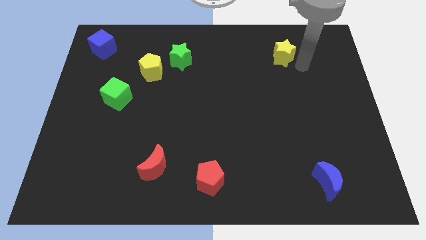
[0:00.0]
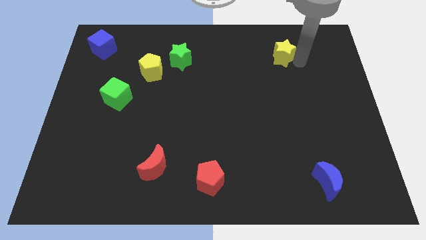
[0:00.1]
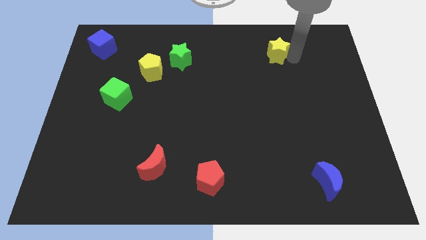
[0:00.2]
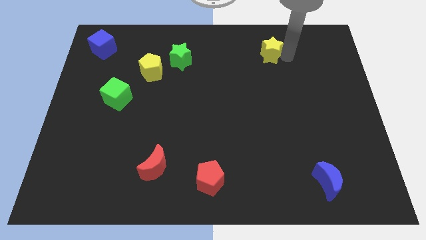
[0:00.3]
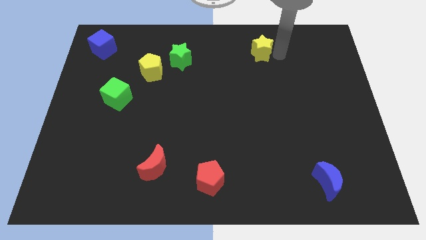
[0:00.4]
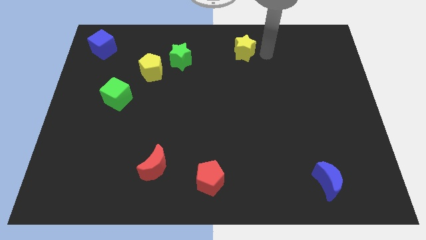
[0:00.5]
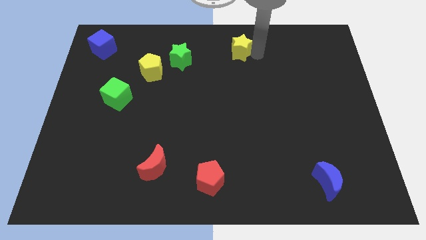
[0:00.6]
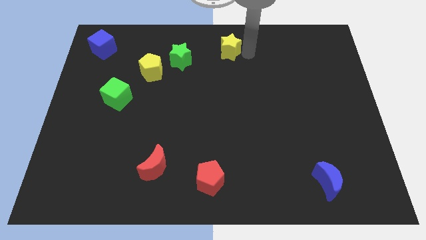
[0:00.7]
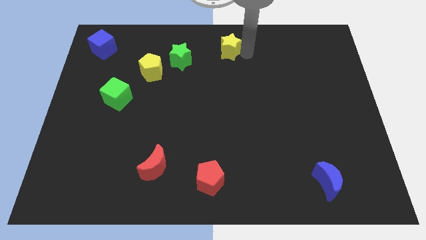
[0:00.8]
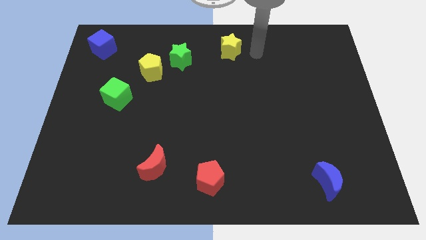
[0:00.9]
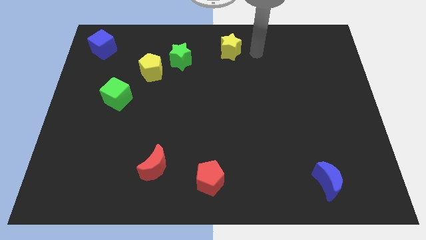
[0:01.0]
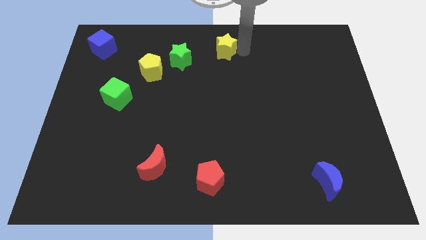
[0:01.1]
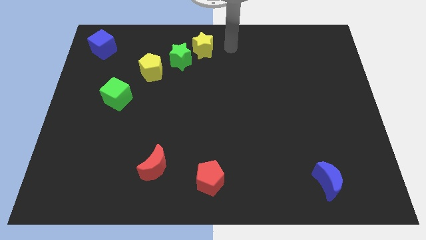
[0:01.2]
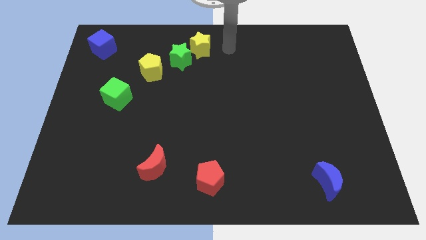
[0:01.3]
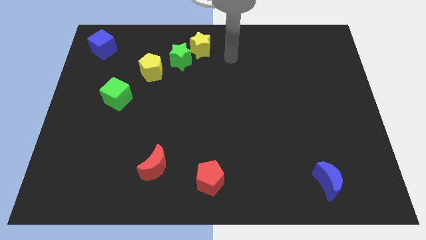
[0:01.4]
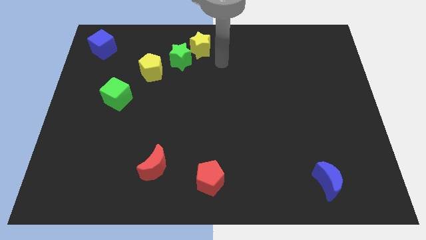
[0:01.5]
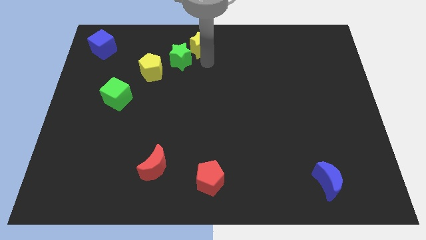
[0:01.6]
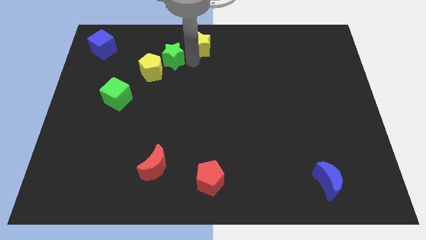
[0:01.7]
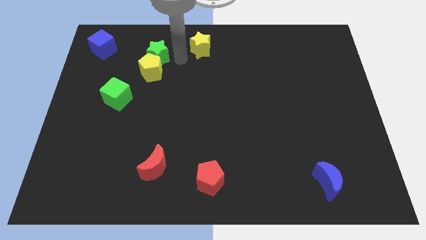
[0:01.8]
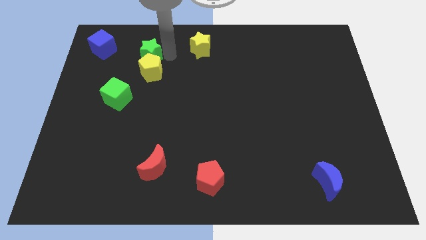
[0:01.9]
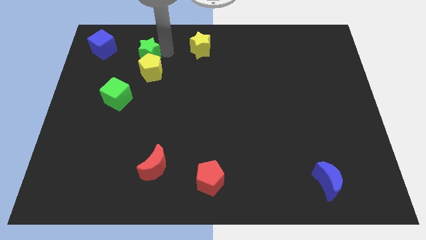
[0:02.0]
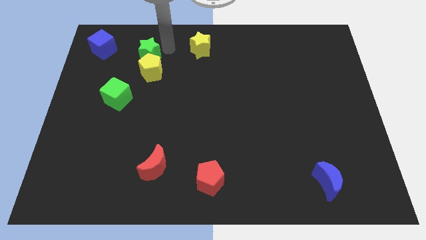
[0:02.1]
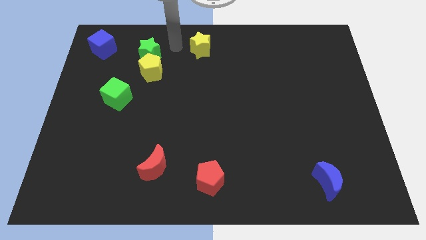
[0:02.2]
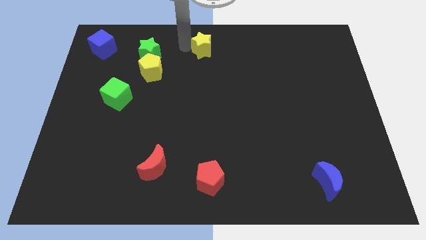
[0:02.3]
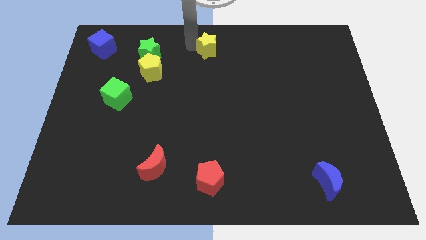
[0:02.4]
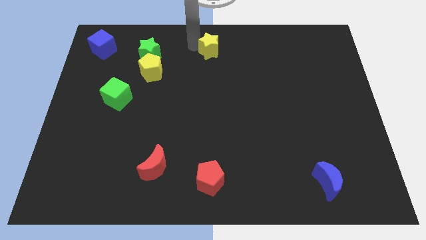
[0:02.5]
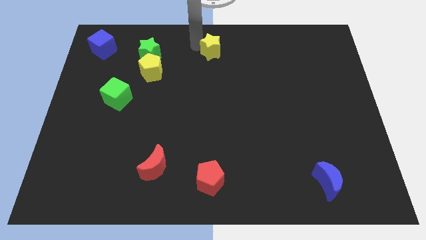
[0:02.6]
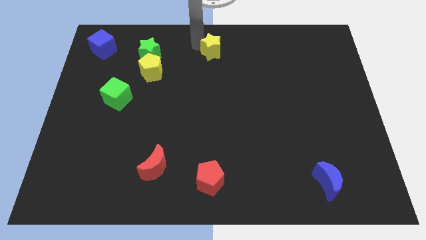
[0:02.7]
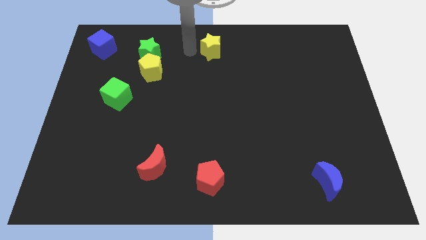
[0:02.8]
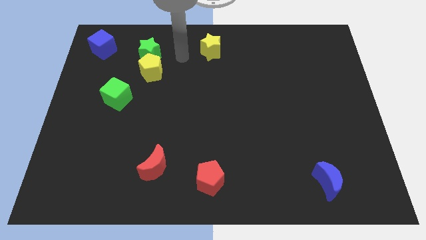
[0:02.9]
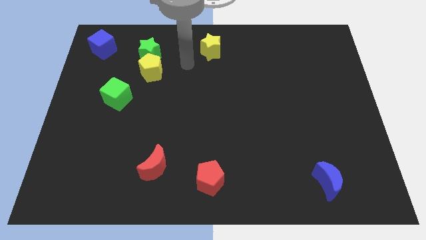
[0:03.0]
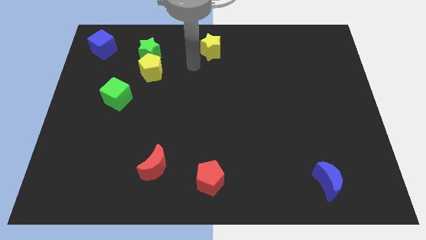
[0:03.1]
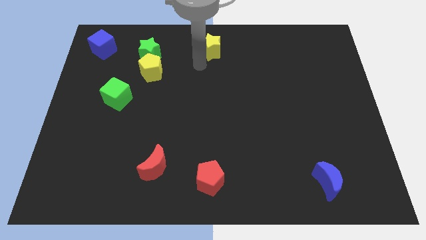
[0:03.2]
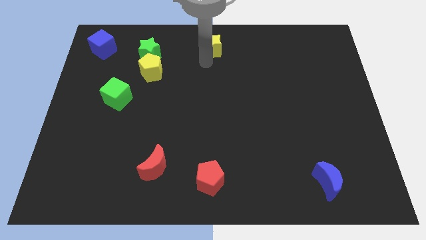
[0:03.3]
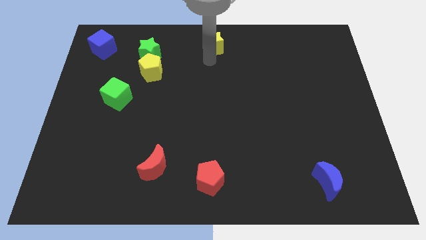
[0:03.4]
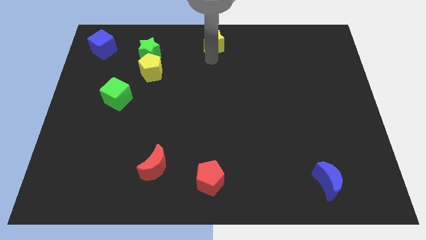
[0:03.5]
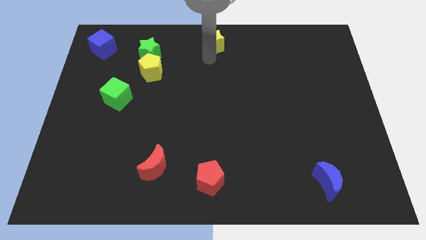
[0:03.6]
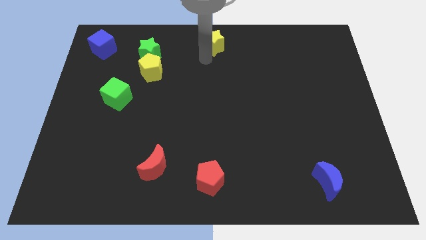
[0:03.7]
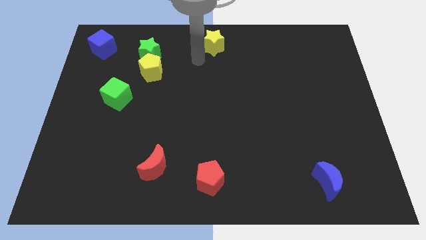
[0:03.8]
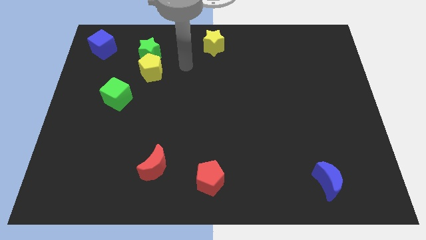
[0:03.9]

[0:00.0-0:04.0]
move the yellow star to the top center

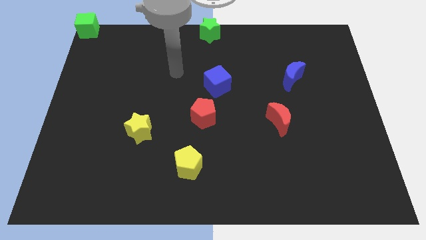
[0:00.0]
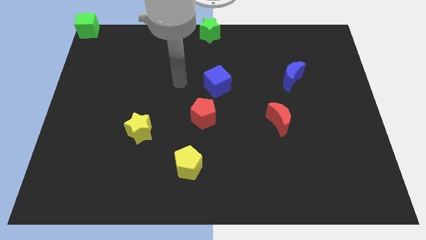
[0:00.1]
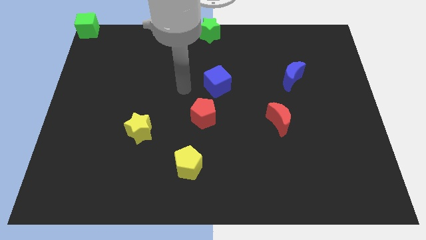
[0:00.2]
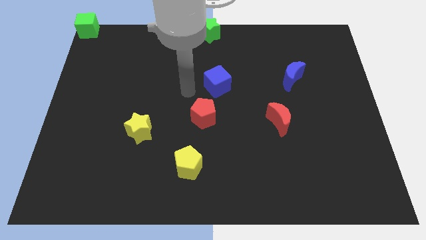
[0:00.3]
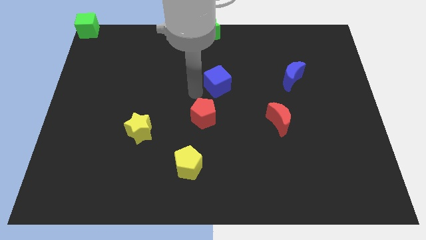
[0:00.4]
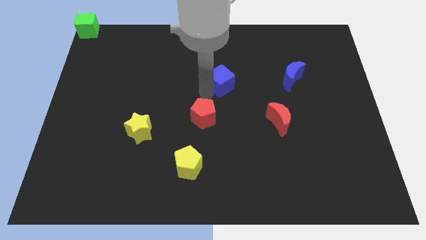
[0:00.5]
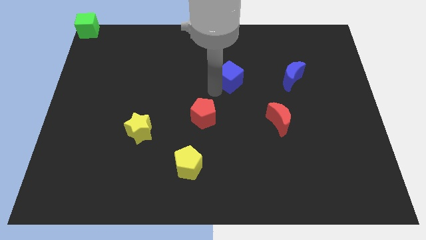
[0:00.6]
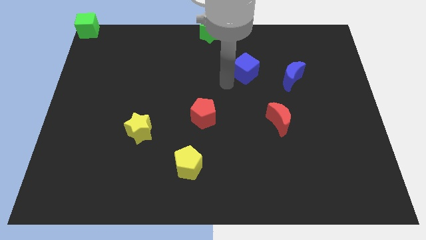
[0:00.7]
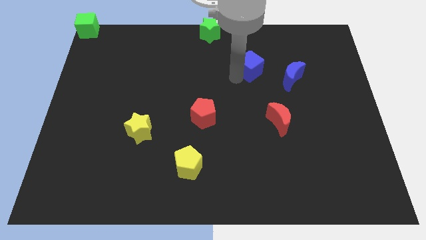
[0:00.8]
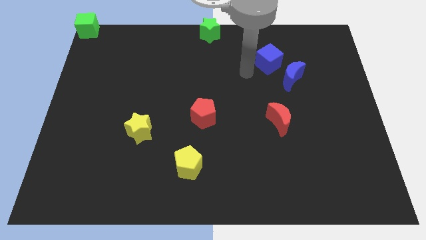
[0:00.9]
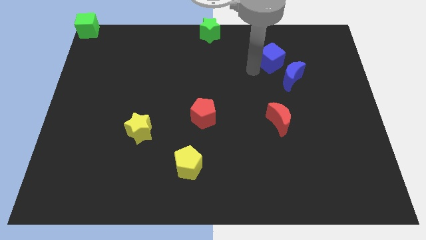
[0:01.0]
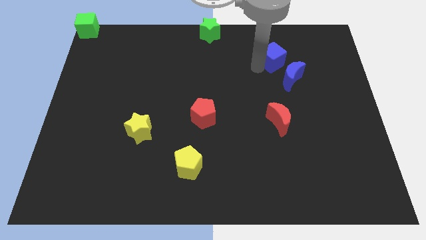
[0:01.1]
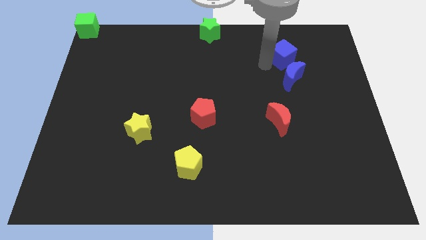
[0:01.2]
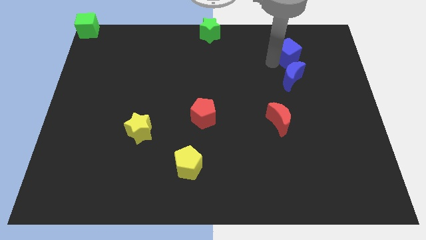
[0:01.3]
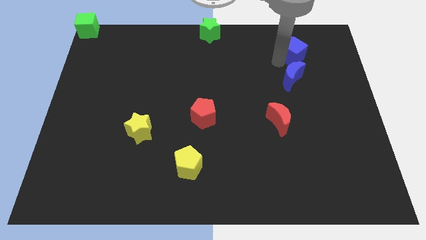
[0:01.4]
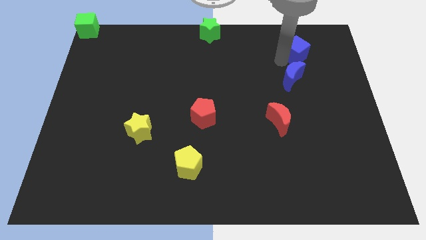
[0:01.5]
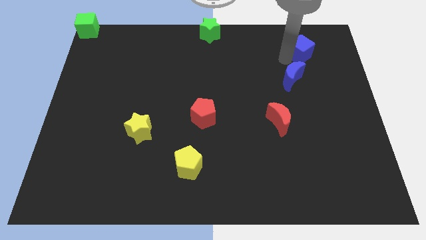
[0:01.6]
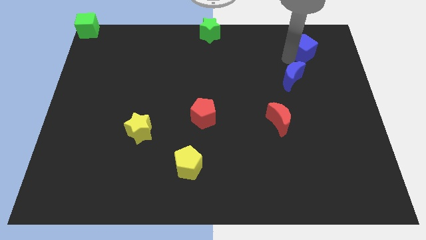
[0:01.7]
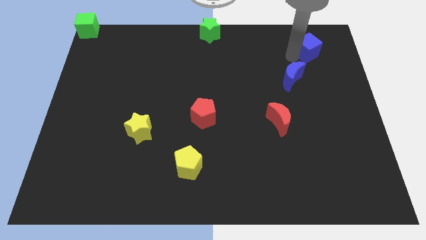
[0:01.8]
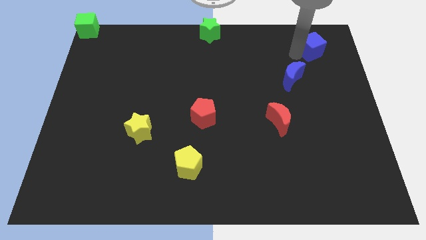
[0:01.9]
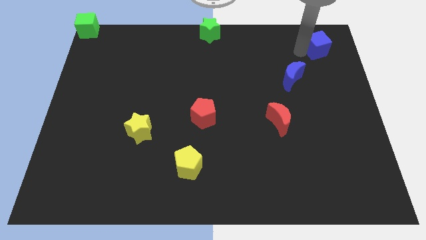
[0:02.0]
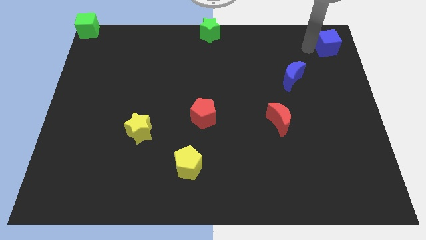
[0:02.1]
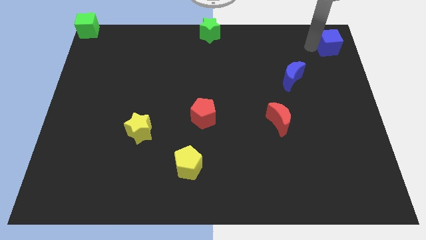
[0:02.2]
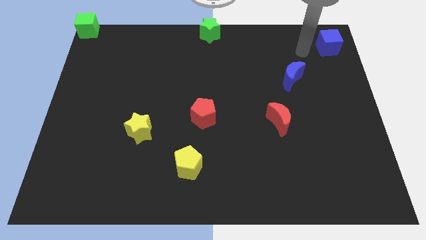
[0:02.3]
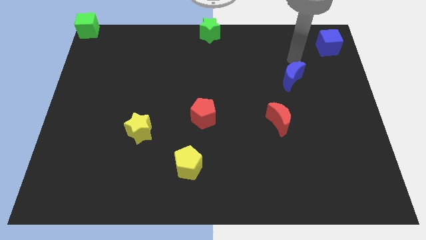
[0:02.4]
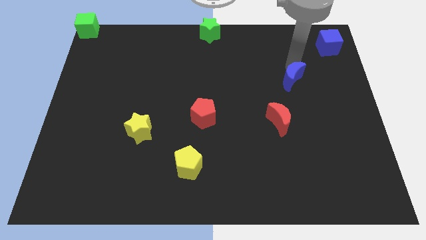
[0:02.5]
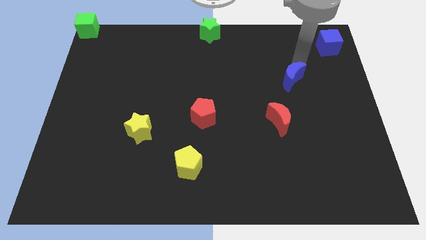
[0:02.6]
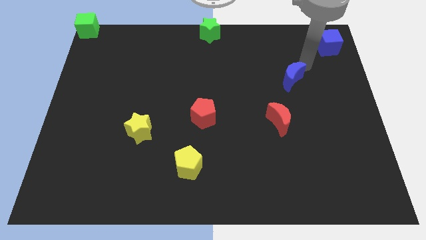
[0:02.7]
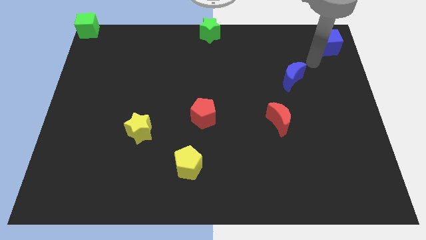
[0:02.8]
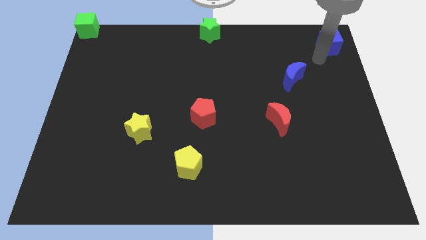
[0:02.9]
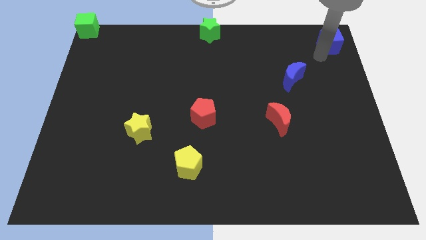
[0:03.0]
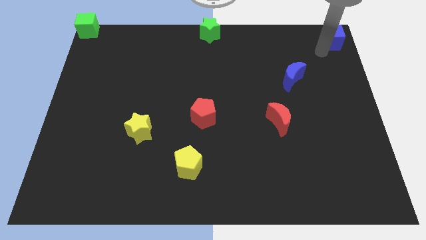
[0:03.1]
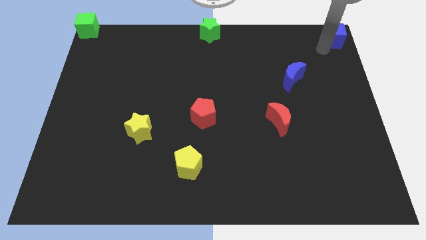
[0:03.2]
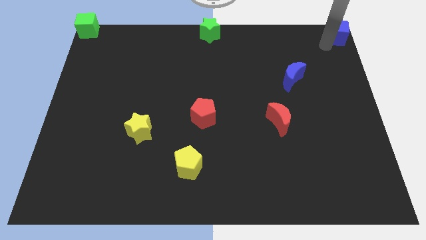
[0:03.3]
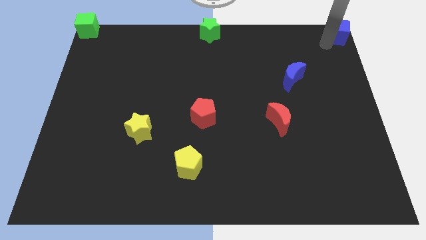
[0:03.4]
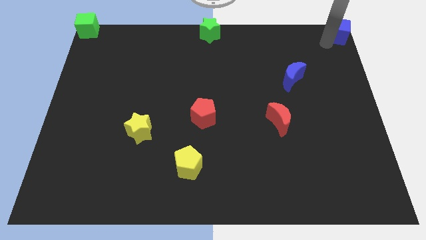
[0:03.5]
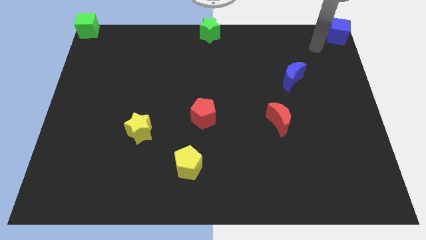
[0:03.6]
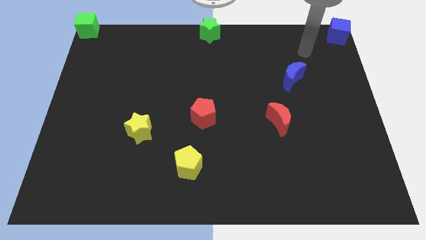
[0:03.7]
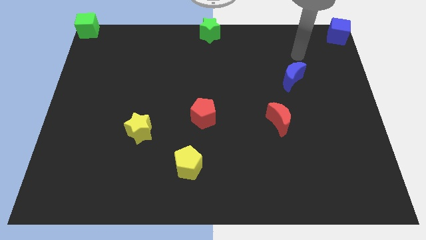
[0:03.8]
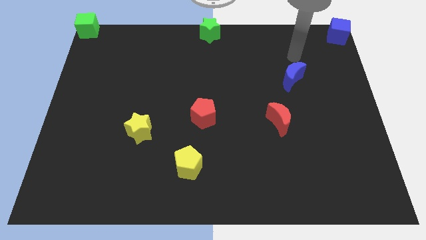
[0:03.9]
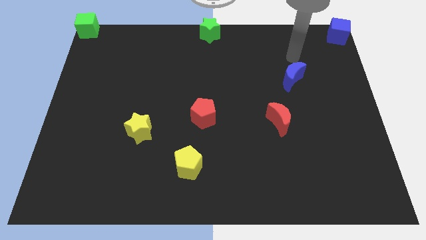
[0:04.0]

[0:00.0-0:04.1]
push blue cube to the top right

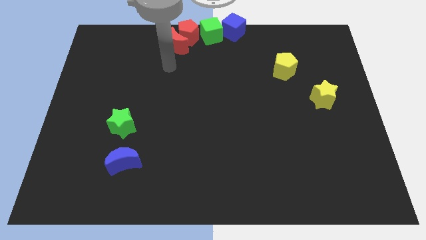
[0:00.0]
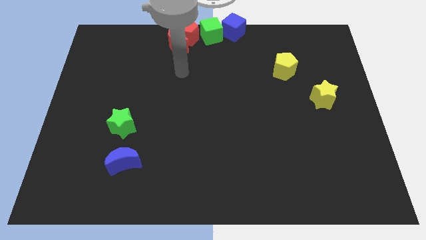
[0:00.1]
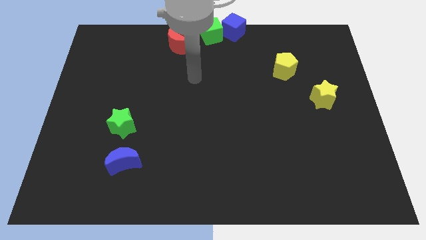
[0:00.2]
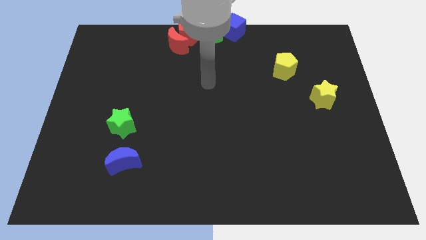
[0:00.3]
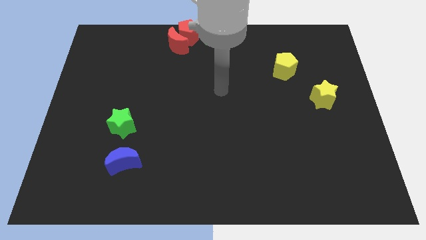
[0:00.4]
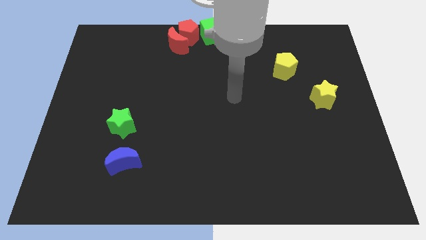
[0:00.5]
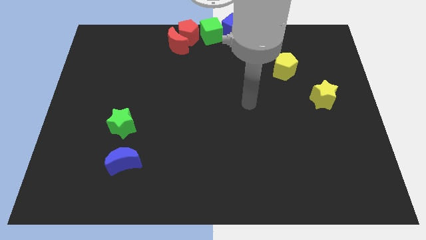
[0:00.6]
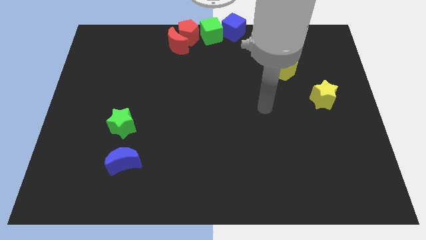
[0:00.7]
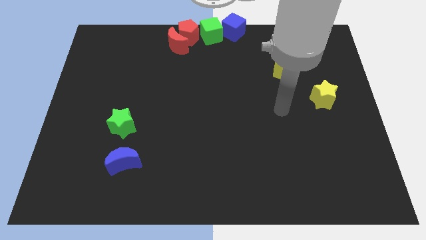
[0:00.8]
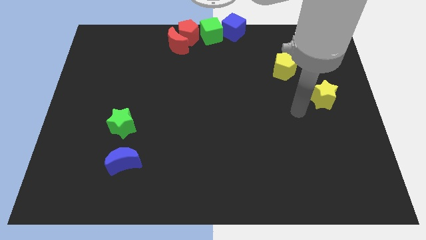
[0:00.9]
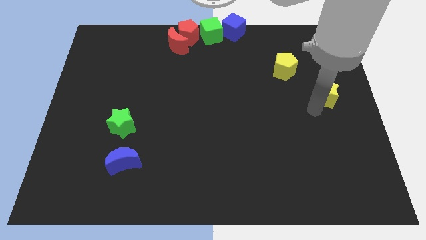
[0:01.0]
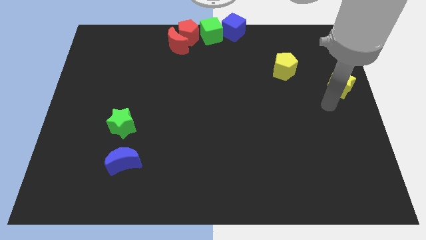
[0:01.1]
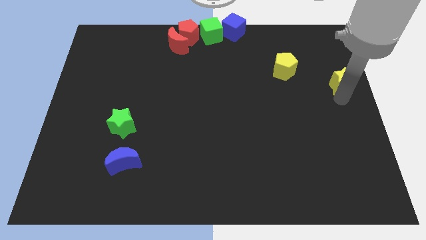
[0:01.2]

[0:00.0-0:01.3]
hit the yellow star
